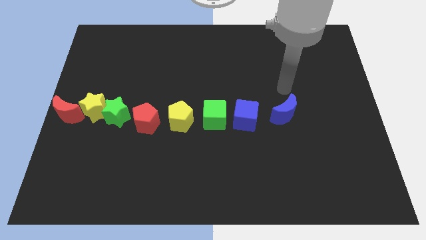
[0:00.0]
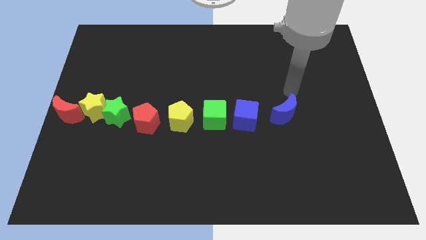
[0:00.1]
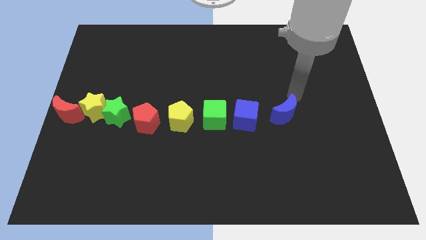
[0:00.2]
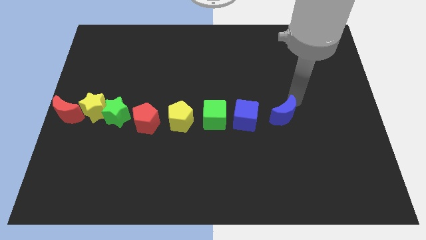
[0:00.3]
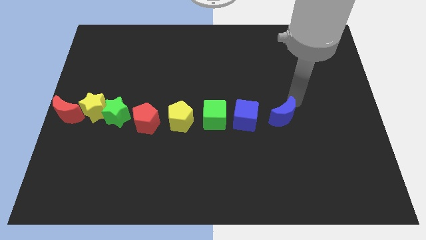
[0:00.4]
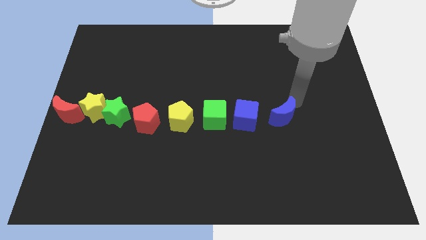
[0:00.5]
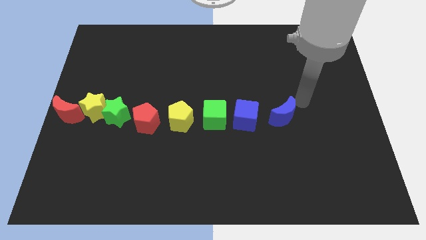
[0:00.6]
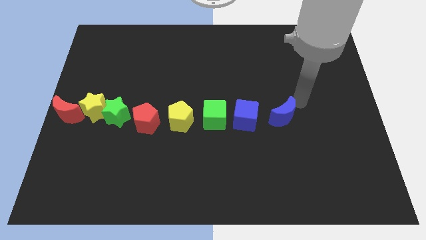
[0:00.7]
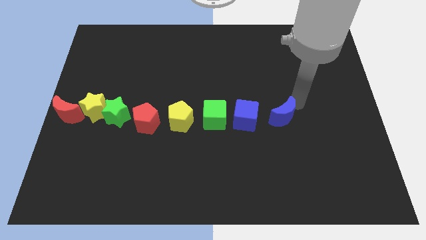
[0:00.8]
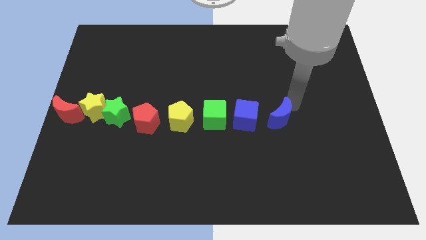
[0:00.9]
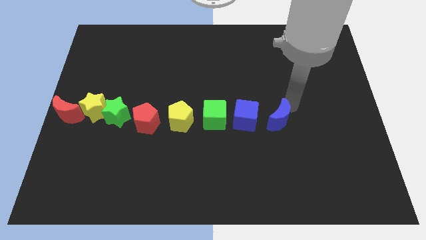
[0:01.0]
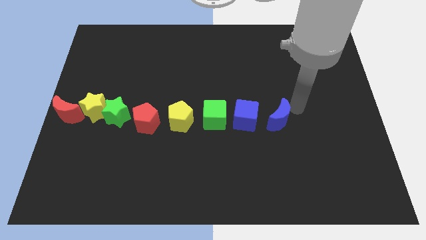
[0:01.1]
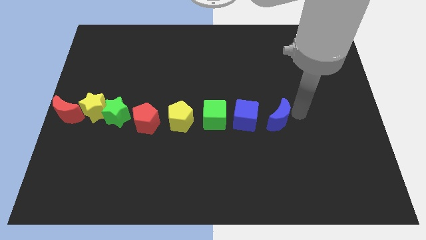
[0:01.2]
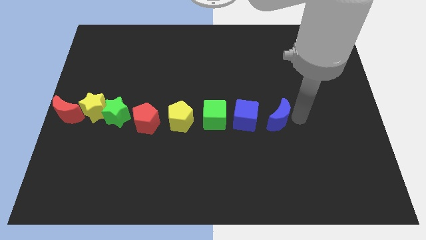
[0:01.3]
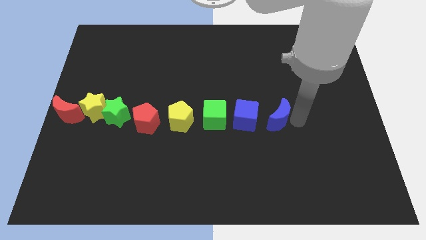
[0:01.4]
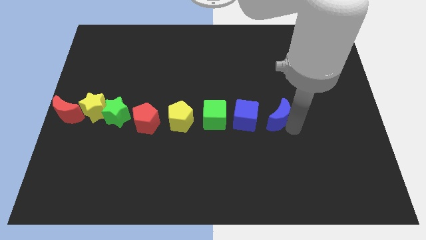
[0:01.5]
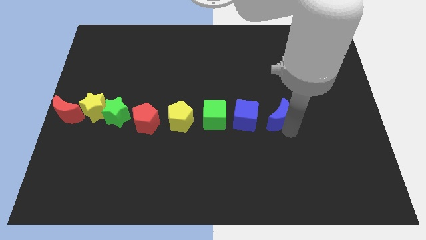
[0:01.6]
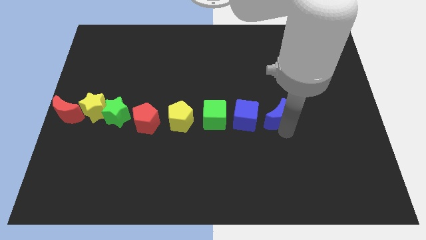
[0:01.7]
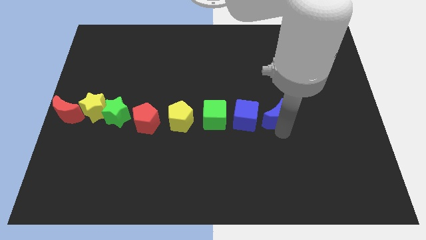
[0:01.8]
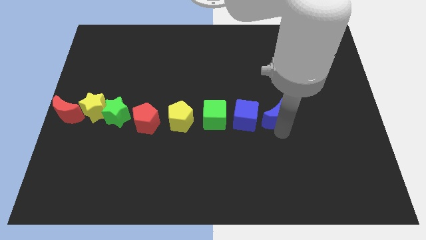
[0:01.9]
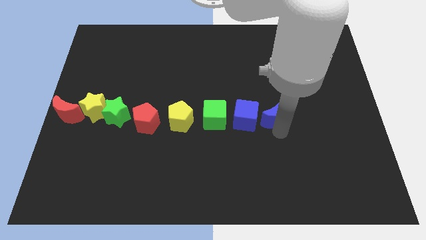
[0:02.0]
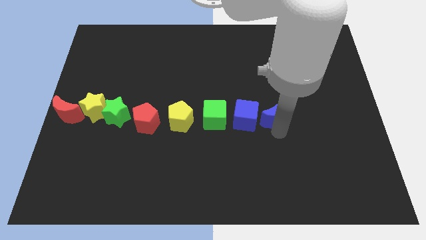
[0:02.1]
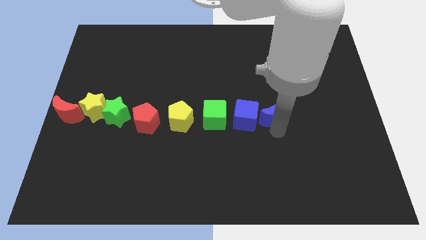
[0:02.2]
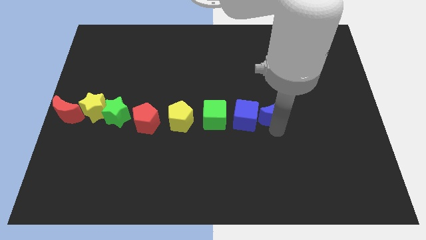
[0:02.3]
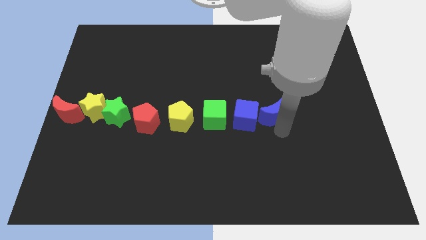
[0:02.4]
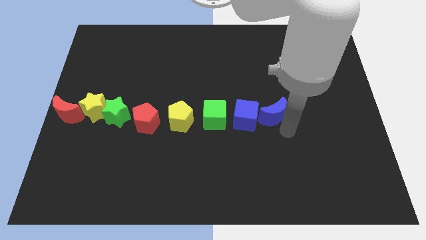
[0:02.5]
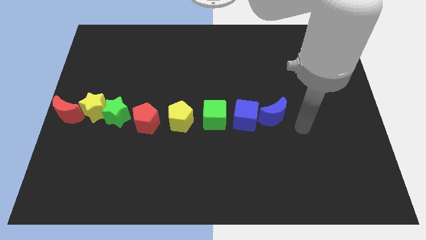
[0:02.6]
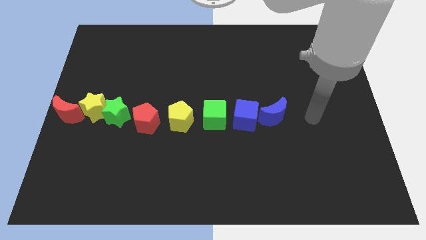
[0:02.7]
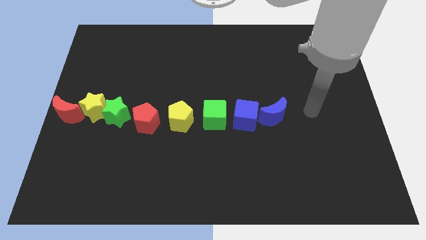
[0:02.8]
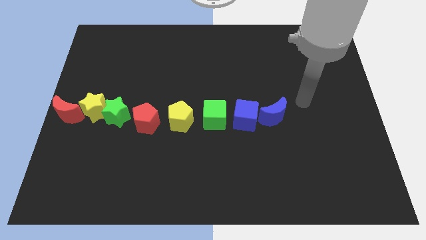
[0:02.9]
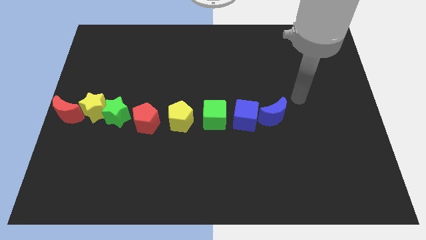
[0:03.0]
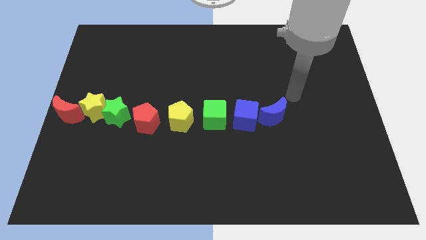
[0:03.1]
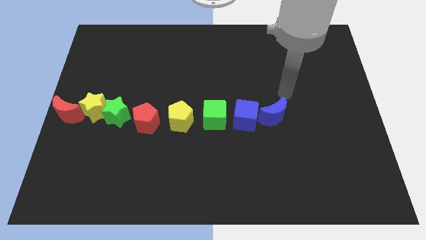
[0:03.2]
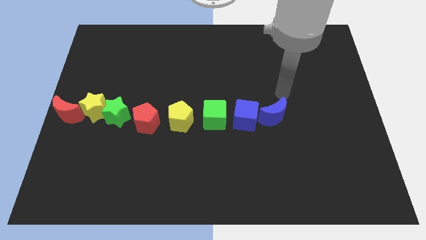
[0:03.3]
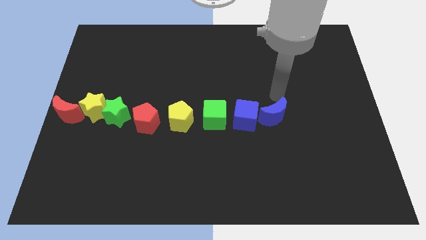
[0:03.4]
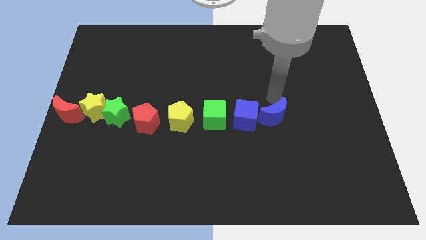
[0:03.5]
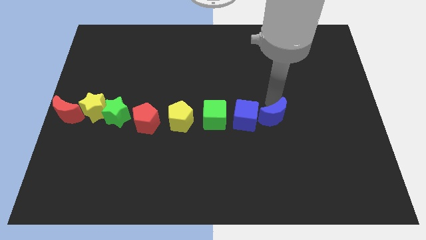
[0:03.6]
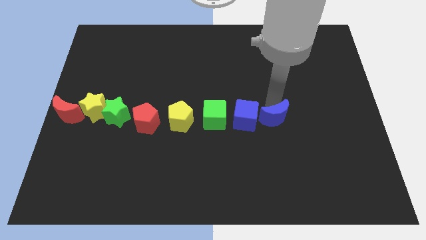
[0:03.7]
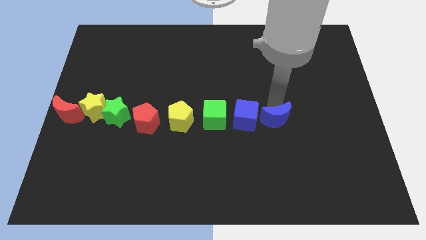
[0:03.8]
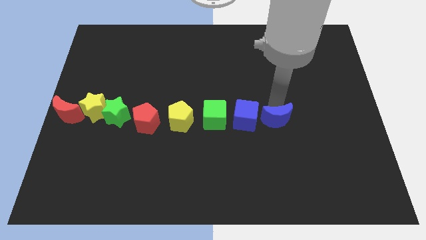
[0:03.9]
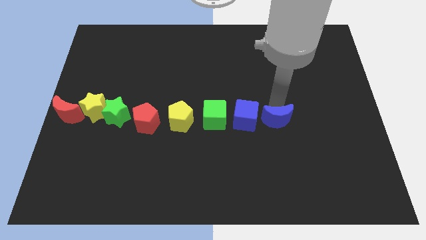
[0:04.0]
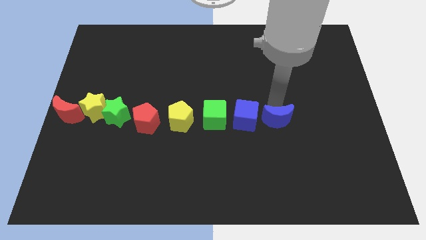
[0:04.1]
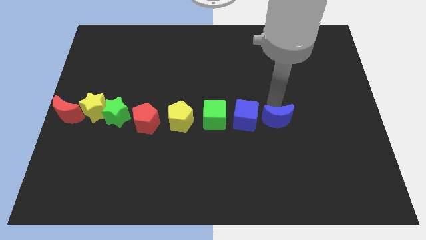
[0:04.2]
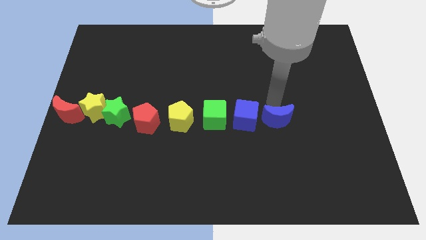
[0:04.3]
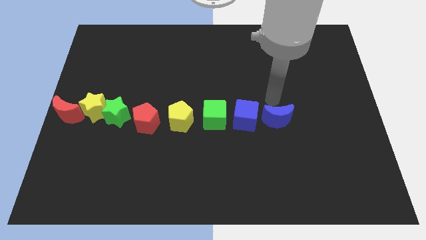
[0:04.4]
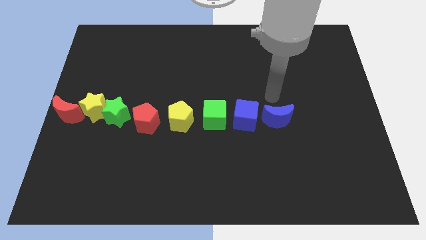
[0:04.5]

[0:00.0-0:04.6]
put all the blocks in a horizontal line

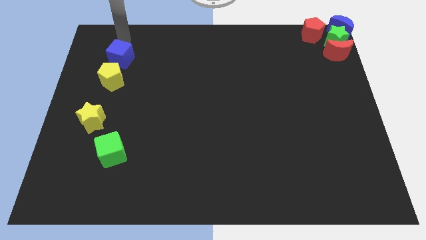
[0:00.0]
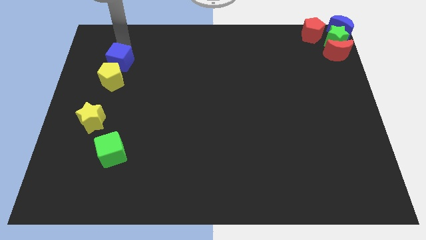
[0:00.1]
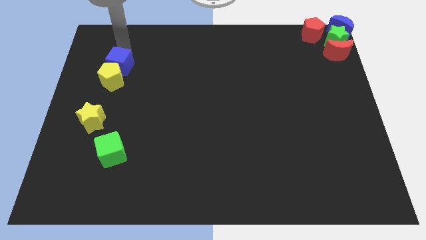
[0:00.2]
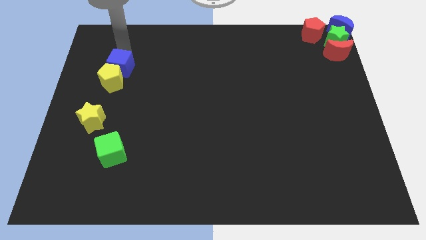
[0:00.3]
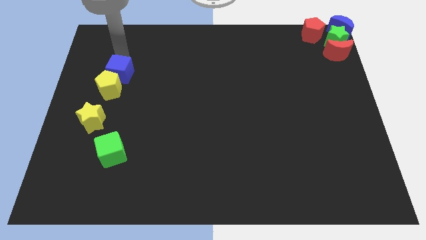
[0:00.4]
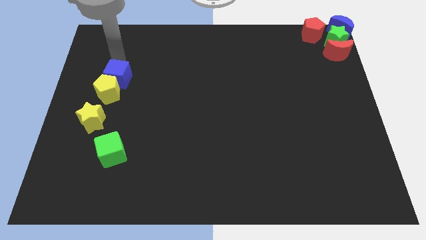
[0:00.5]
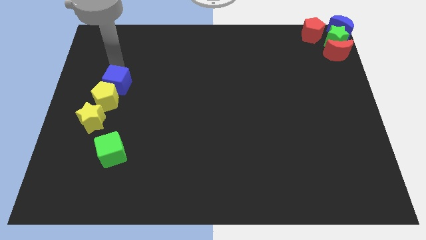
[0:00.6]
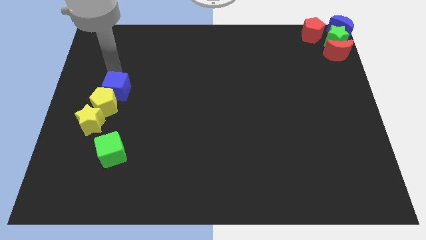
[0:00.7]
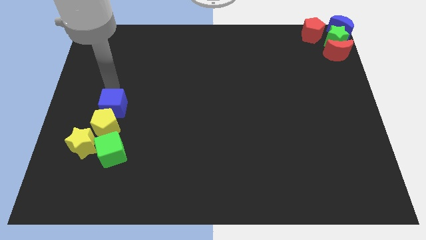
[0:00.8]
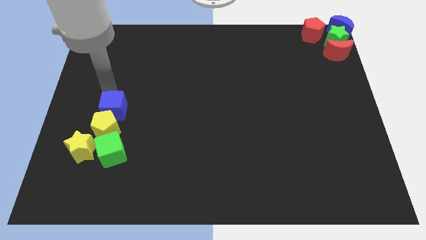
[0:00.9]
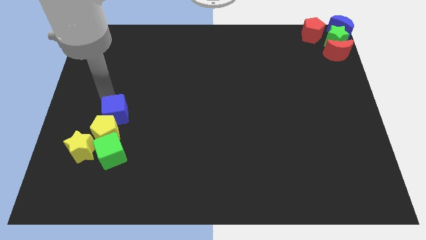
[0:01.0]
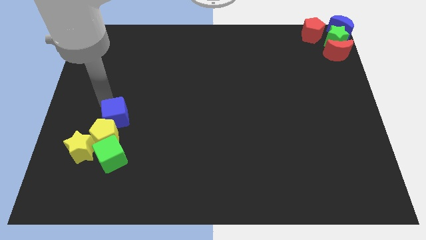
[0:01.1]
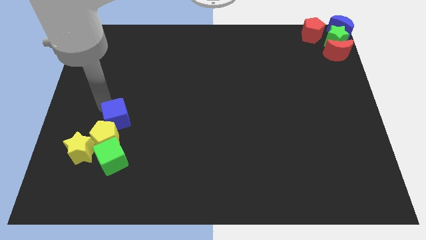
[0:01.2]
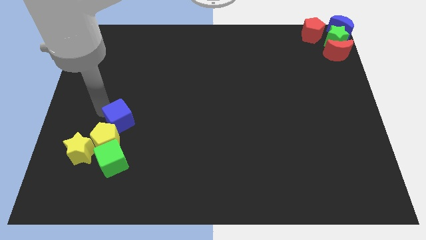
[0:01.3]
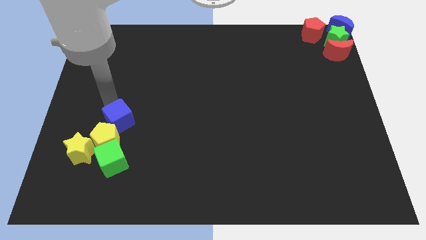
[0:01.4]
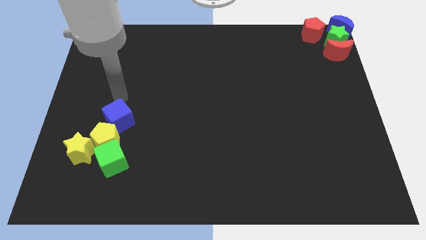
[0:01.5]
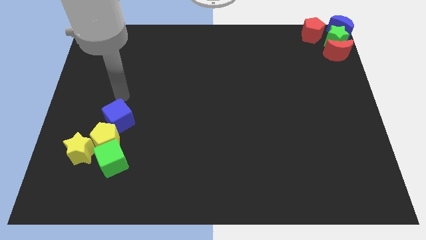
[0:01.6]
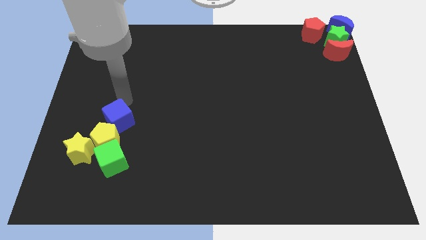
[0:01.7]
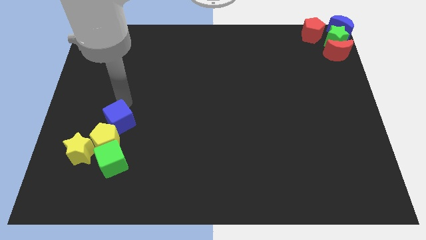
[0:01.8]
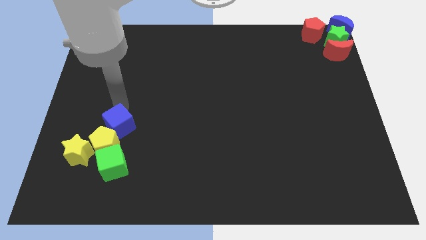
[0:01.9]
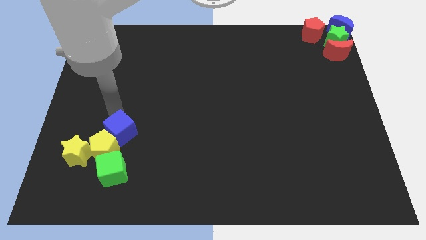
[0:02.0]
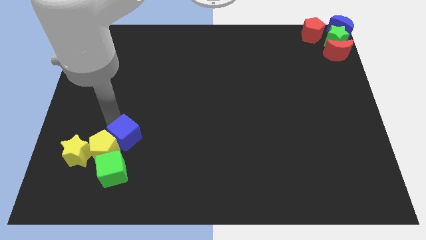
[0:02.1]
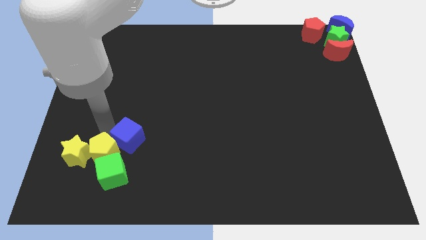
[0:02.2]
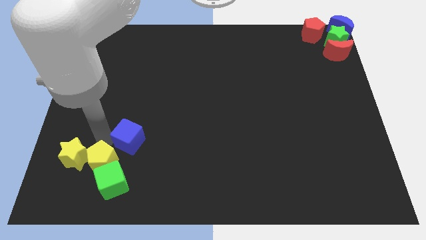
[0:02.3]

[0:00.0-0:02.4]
push the blue cube into the yellow pentagon and star

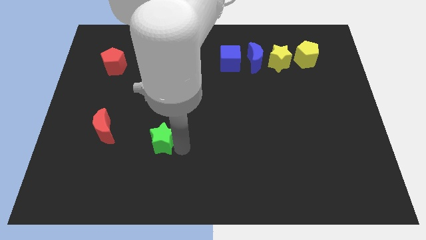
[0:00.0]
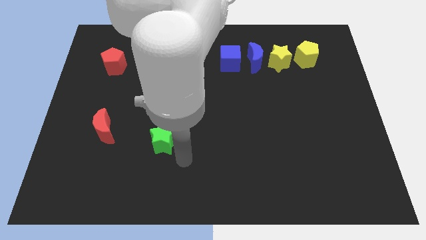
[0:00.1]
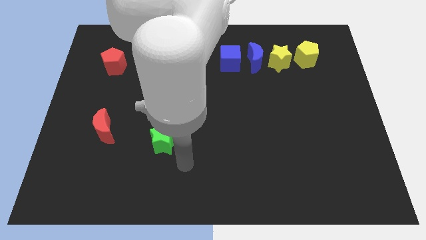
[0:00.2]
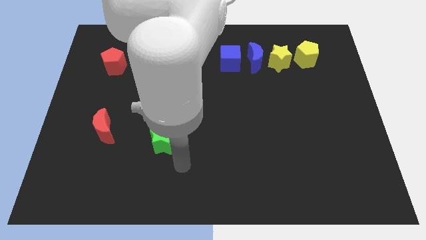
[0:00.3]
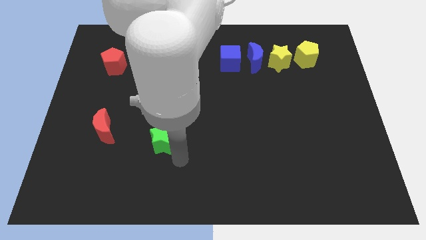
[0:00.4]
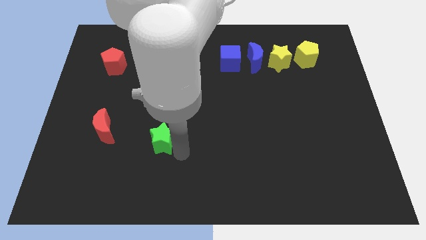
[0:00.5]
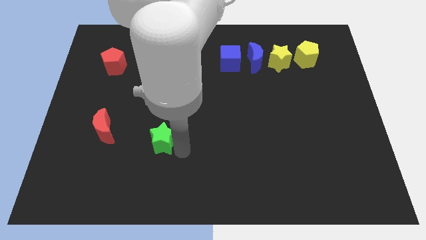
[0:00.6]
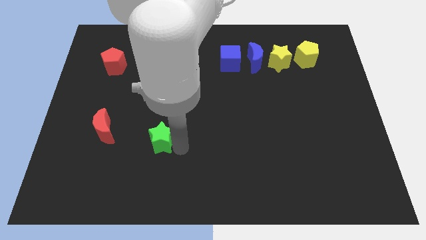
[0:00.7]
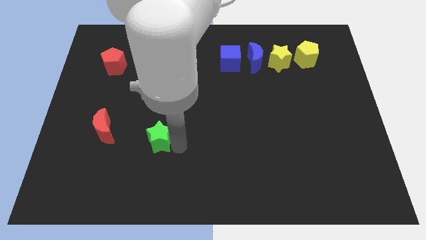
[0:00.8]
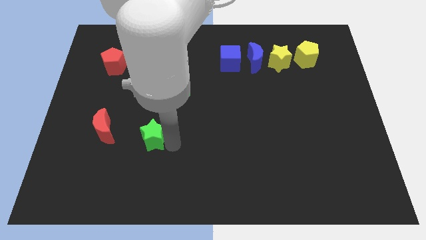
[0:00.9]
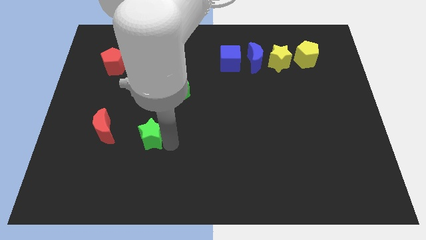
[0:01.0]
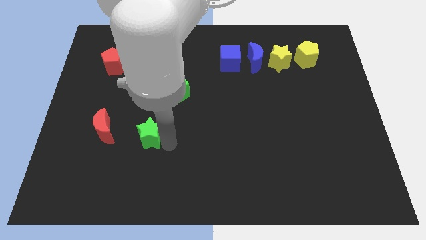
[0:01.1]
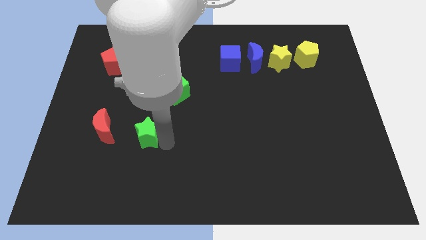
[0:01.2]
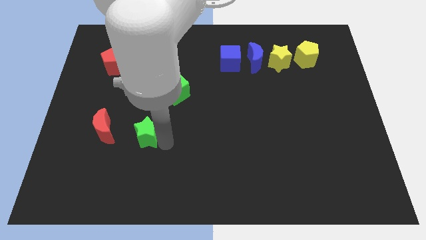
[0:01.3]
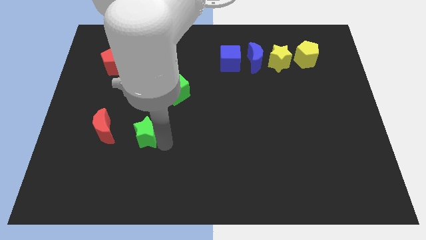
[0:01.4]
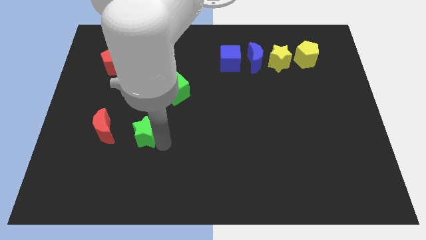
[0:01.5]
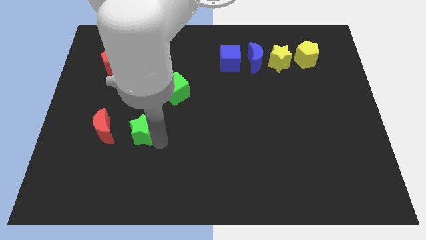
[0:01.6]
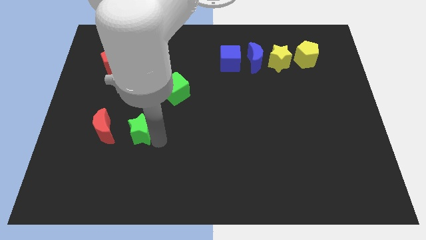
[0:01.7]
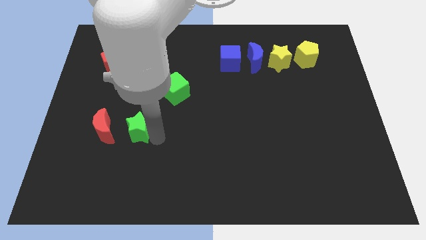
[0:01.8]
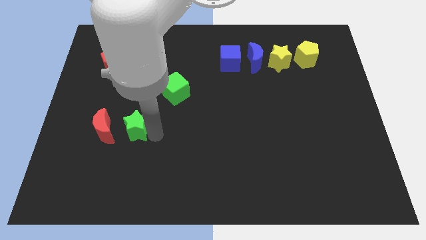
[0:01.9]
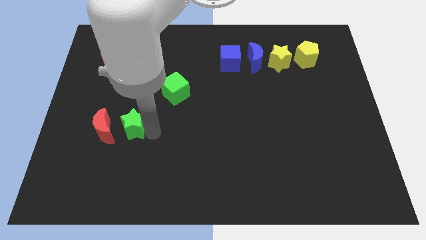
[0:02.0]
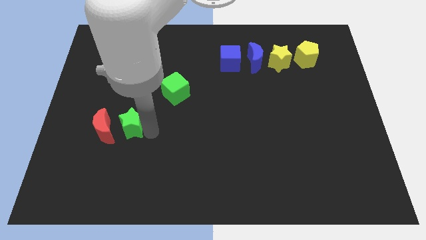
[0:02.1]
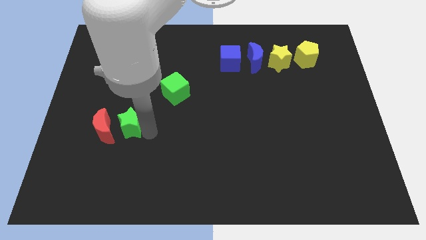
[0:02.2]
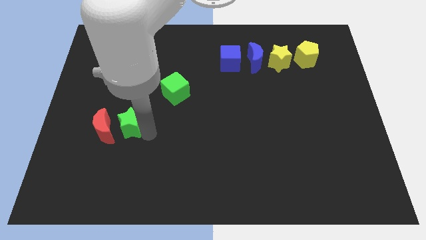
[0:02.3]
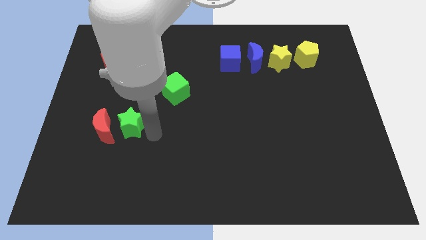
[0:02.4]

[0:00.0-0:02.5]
push the green star to the right of the red moon
